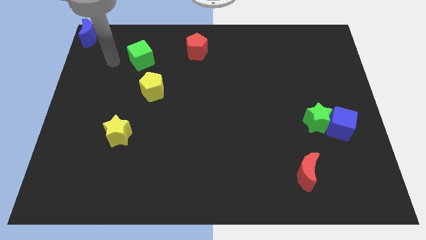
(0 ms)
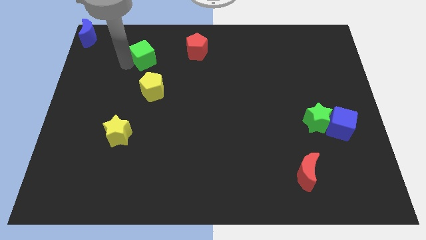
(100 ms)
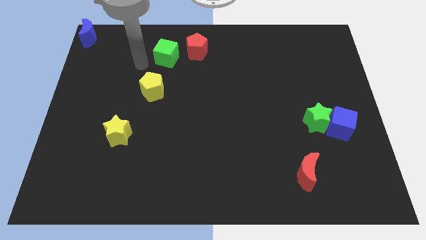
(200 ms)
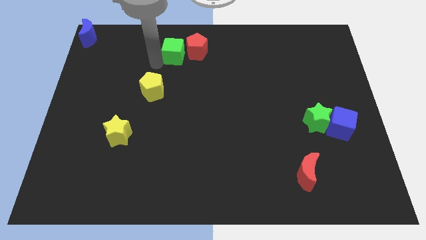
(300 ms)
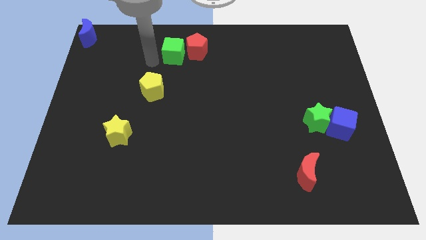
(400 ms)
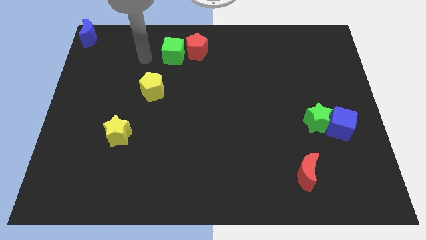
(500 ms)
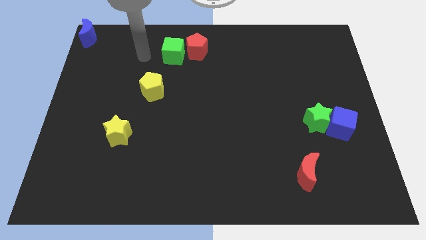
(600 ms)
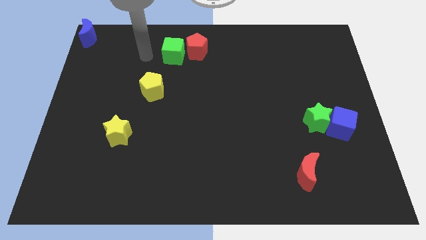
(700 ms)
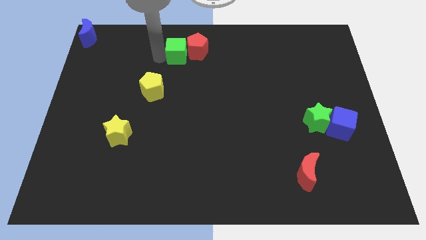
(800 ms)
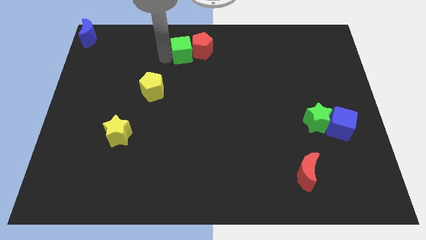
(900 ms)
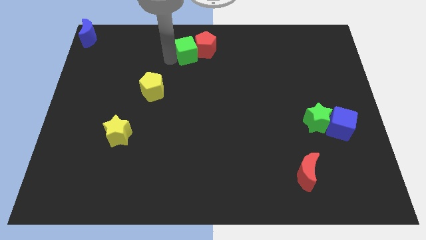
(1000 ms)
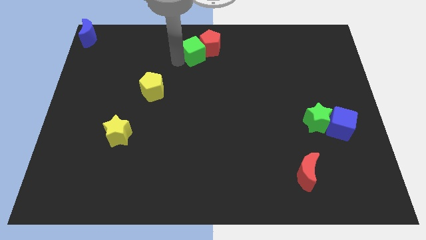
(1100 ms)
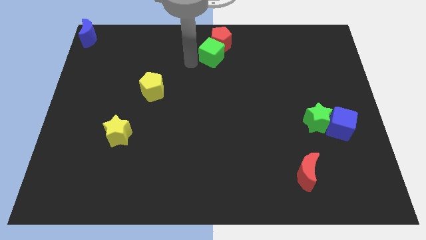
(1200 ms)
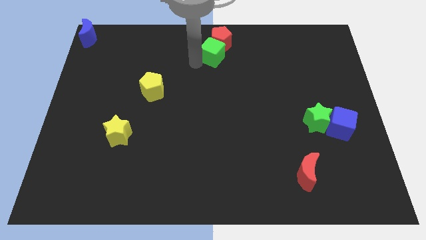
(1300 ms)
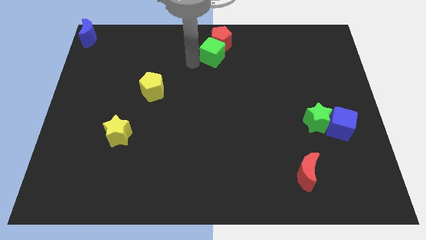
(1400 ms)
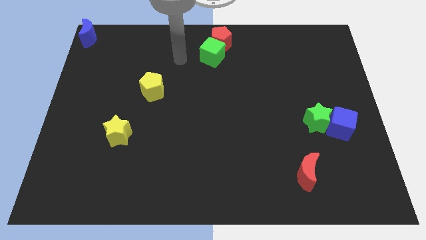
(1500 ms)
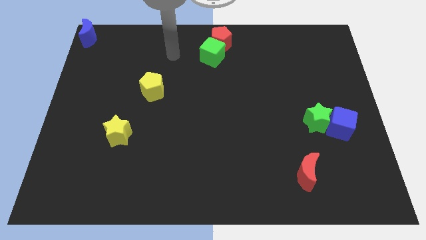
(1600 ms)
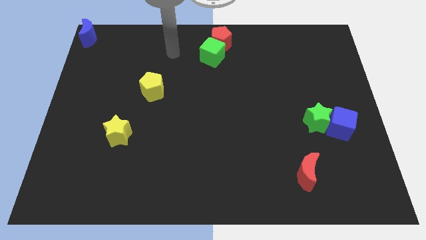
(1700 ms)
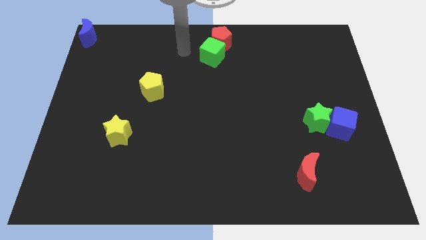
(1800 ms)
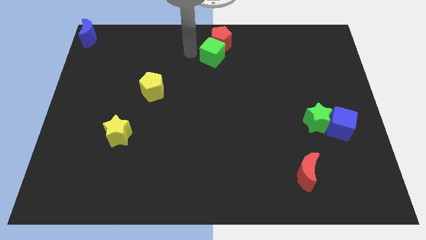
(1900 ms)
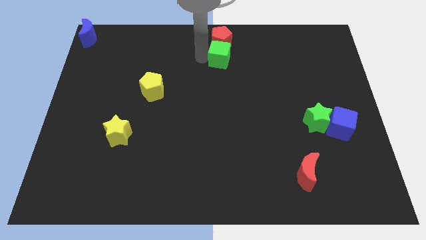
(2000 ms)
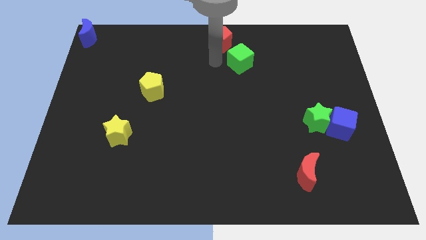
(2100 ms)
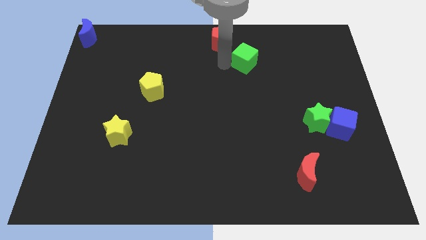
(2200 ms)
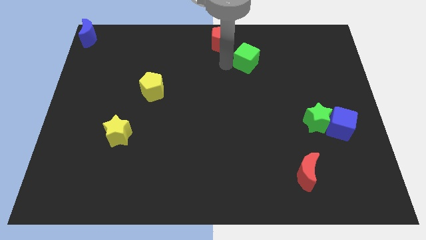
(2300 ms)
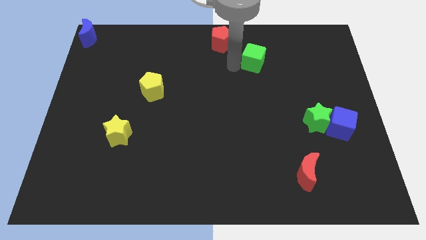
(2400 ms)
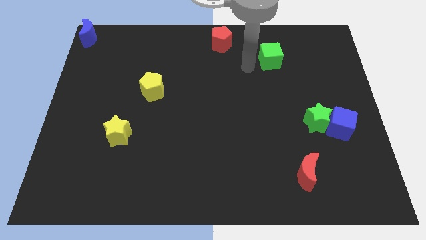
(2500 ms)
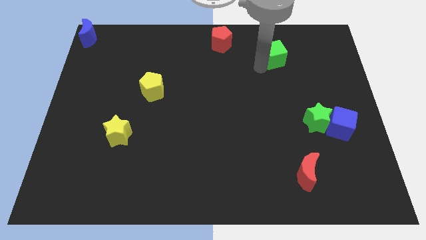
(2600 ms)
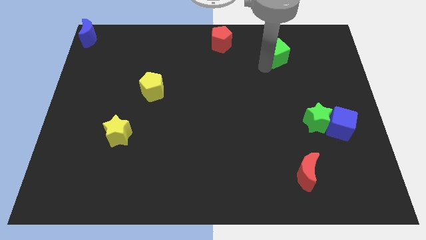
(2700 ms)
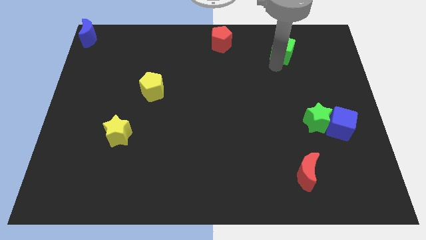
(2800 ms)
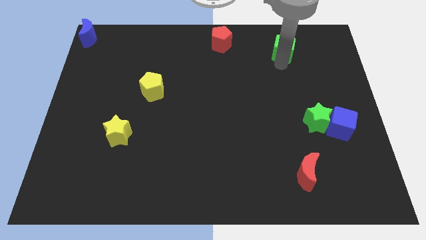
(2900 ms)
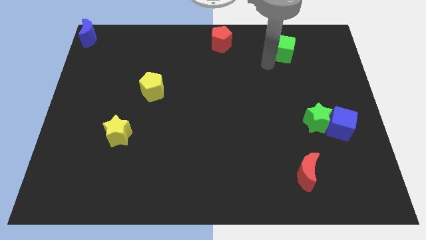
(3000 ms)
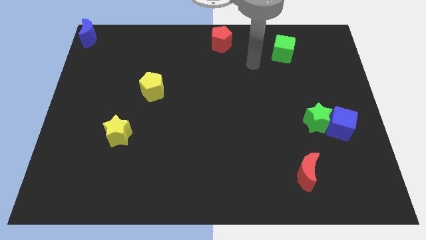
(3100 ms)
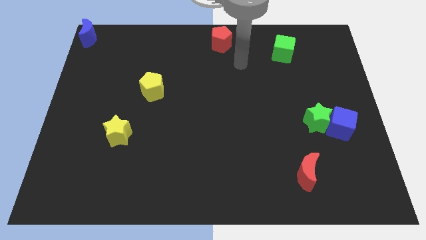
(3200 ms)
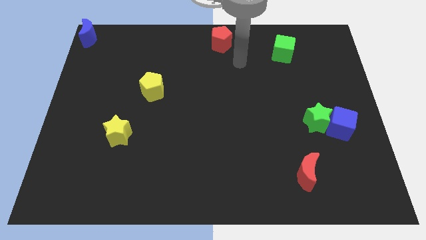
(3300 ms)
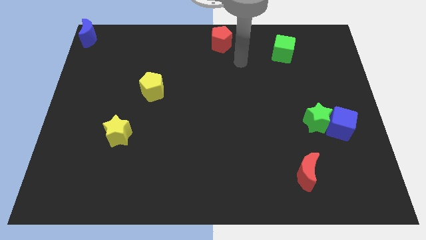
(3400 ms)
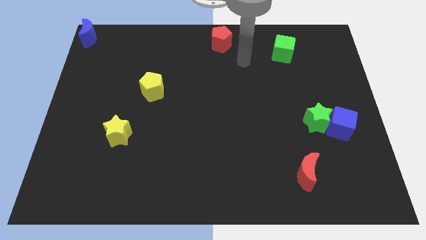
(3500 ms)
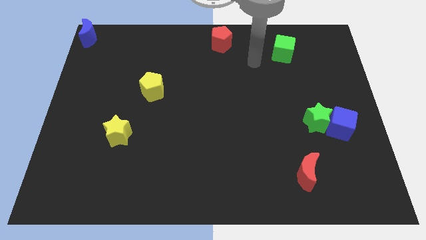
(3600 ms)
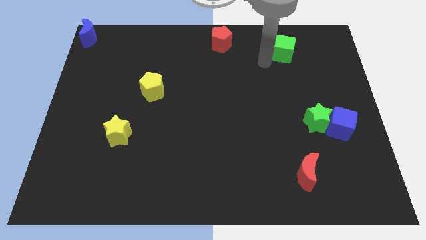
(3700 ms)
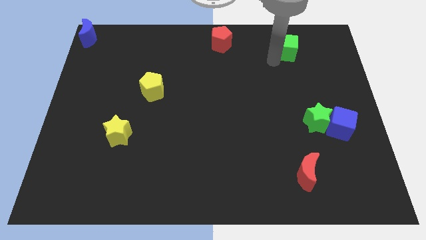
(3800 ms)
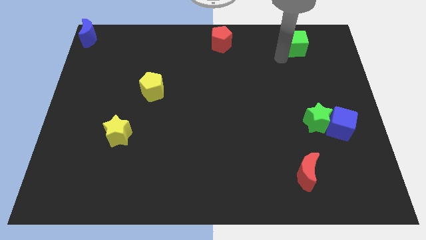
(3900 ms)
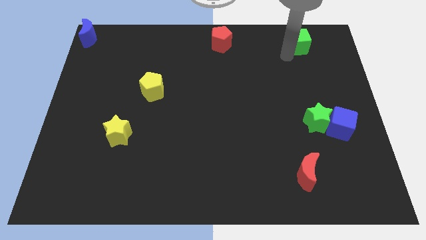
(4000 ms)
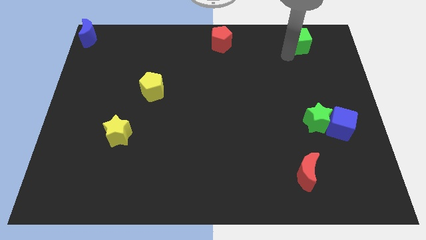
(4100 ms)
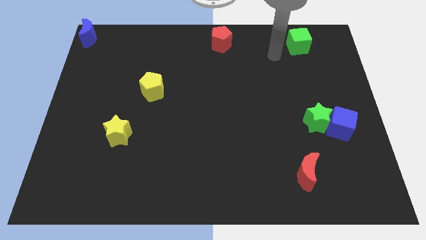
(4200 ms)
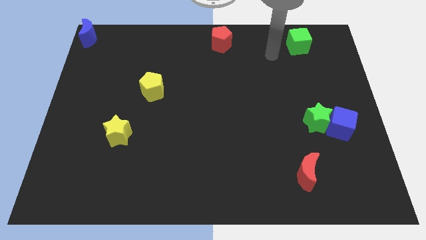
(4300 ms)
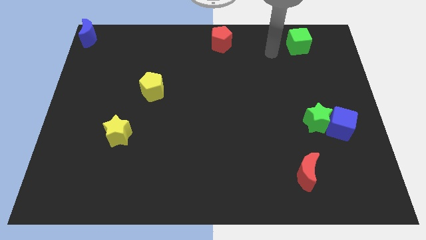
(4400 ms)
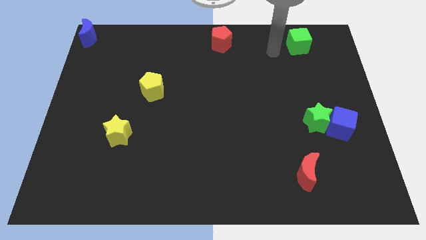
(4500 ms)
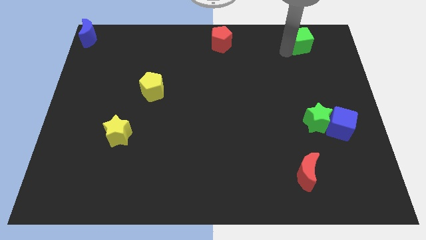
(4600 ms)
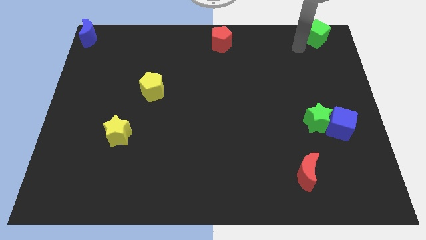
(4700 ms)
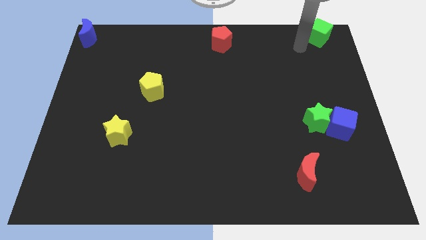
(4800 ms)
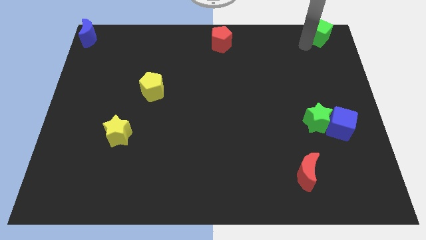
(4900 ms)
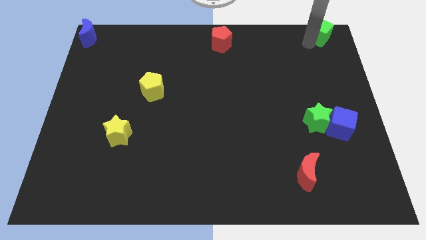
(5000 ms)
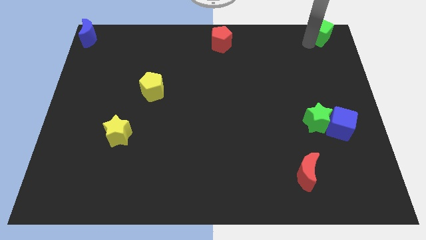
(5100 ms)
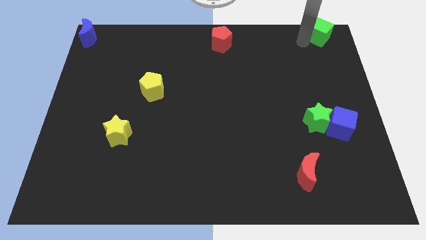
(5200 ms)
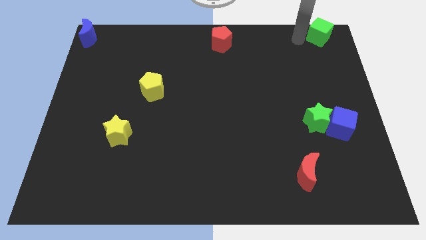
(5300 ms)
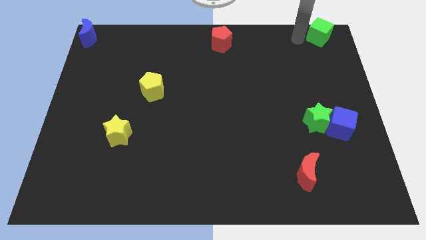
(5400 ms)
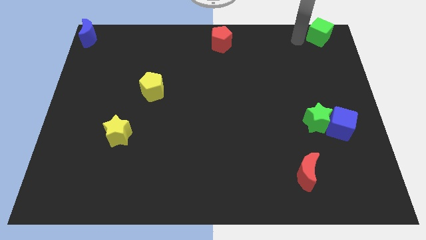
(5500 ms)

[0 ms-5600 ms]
push the green cube to the top right of the board

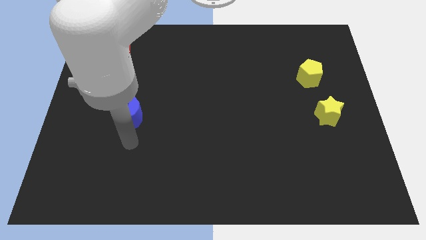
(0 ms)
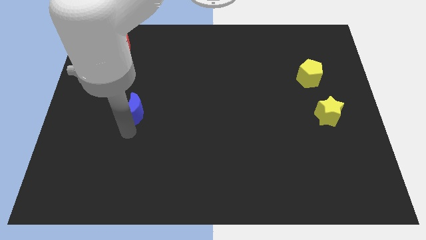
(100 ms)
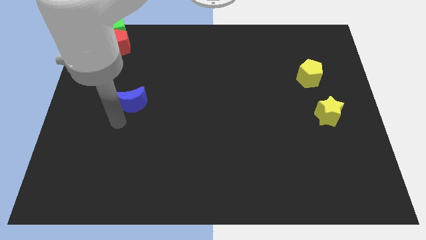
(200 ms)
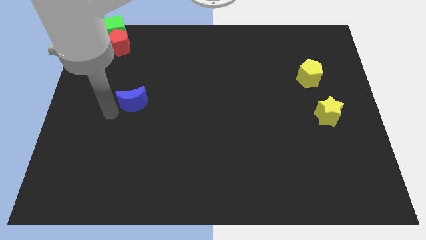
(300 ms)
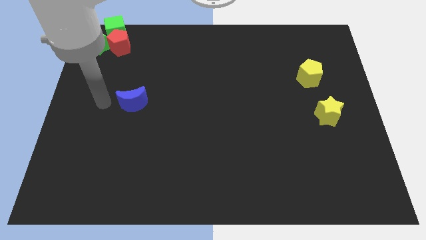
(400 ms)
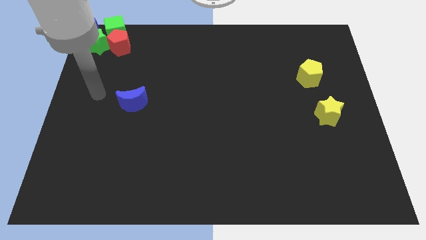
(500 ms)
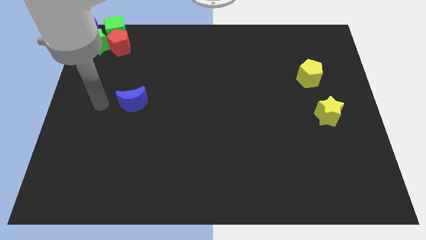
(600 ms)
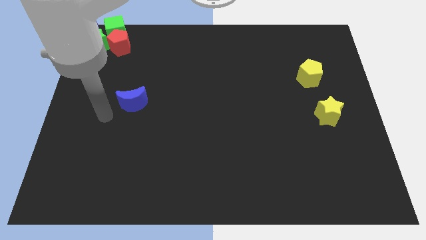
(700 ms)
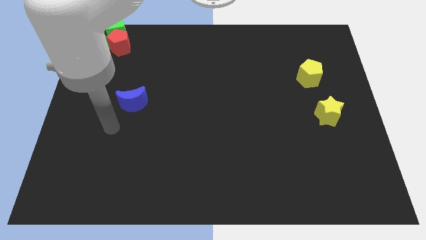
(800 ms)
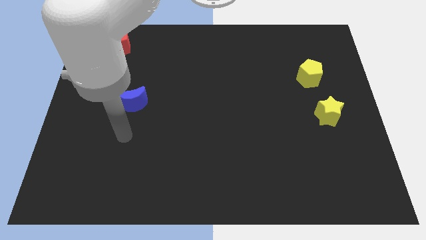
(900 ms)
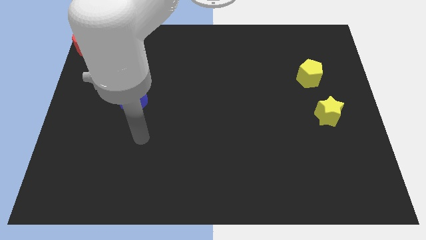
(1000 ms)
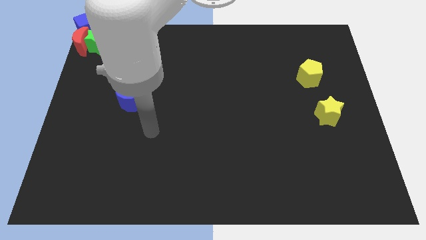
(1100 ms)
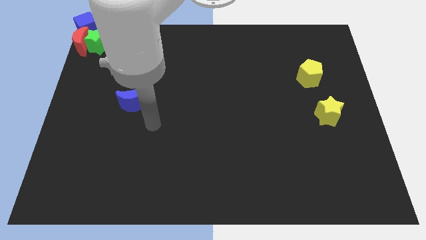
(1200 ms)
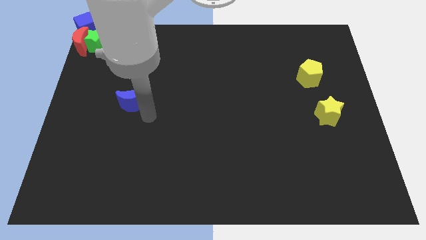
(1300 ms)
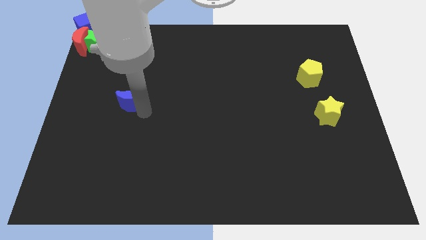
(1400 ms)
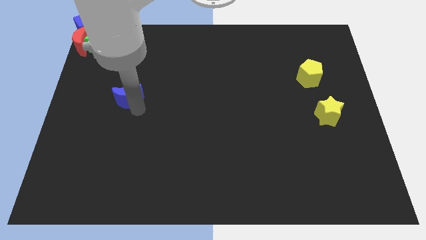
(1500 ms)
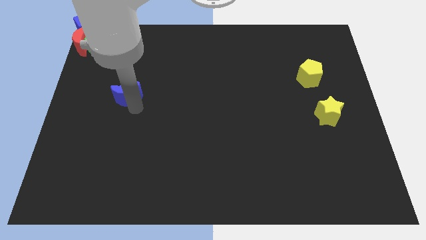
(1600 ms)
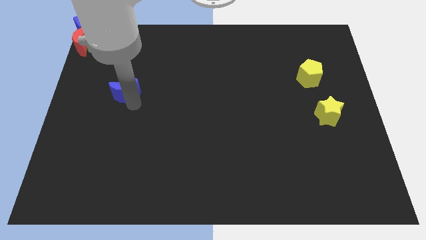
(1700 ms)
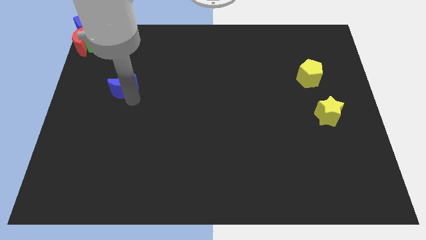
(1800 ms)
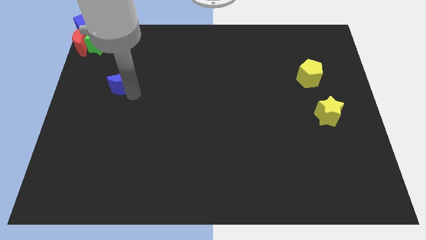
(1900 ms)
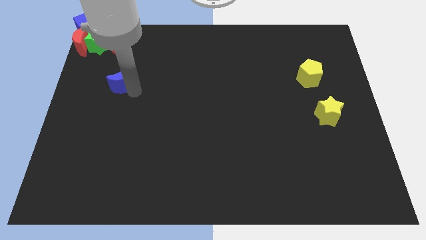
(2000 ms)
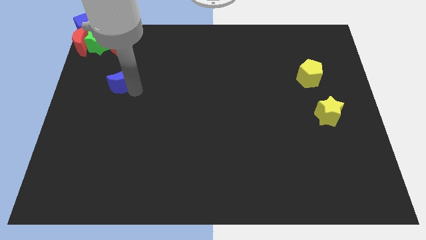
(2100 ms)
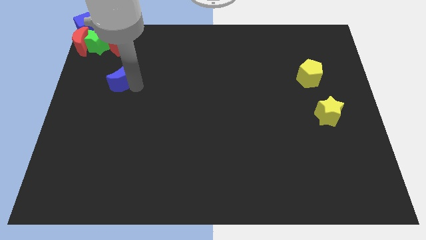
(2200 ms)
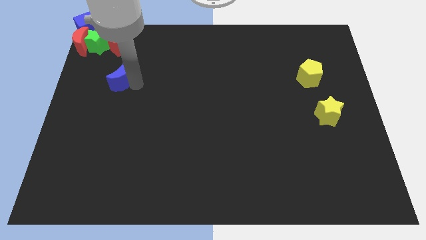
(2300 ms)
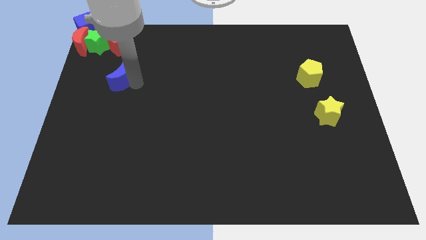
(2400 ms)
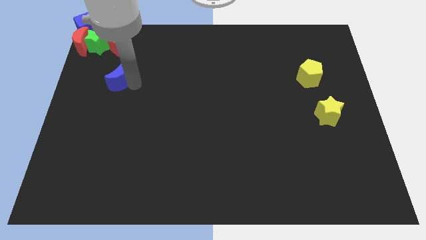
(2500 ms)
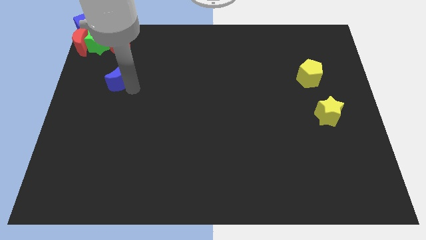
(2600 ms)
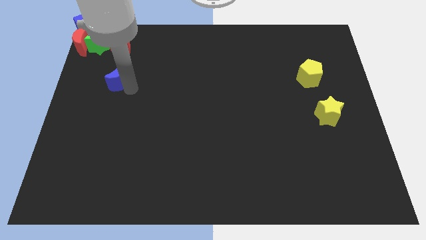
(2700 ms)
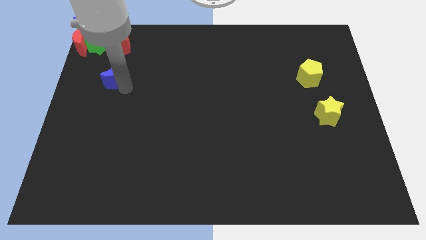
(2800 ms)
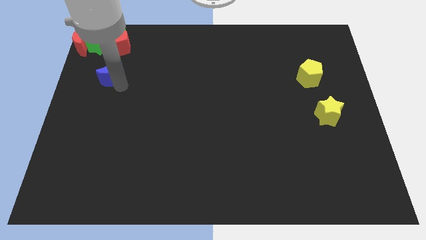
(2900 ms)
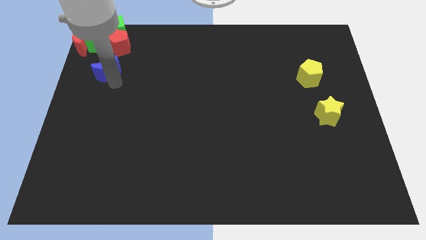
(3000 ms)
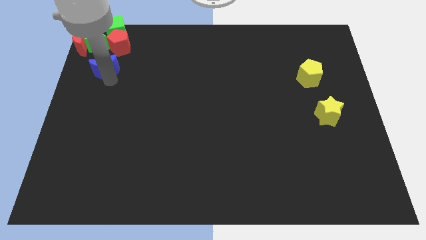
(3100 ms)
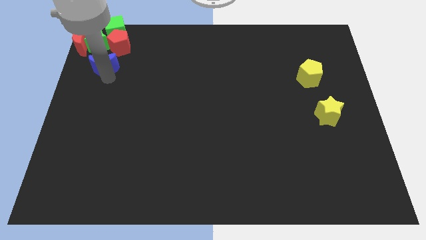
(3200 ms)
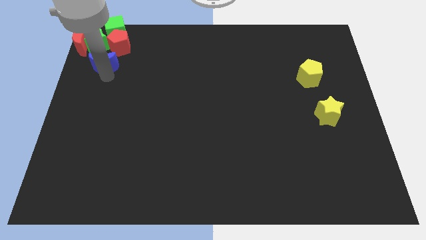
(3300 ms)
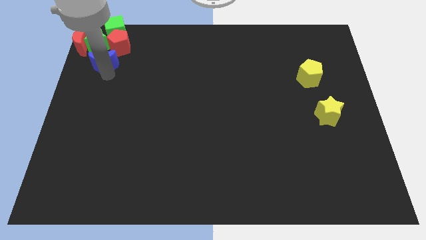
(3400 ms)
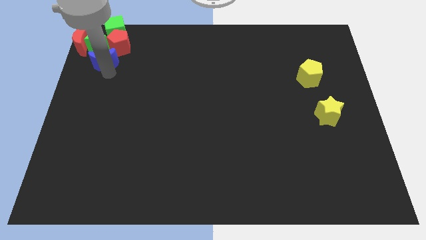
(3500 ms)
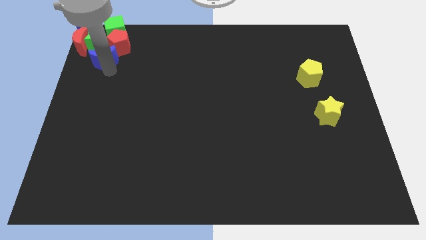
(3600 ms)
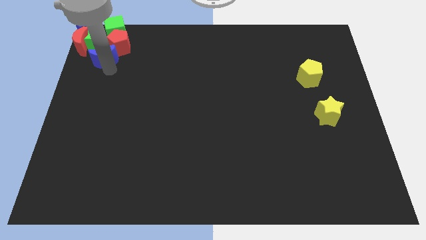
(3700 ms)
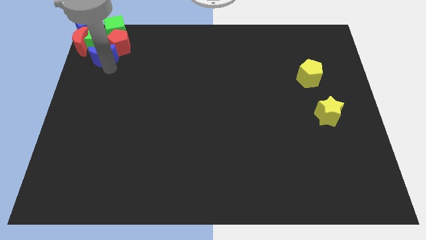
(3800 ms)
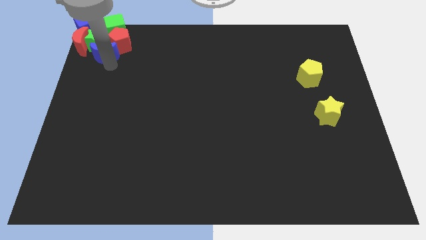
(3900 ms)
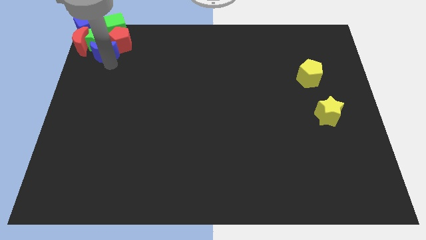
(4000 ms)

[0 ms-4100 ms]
slide the blue moon into the group of blocks
